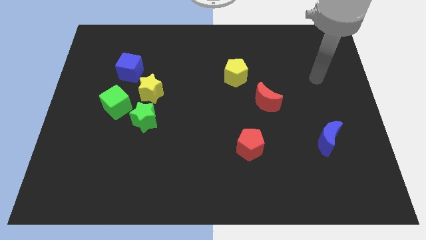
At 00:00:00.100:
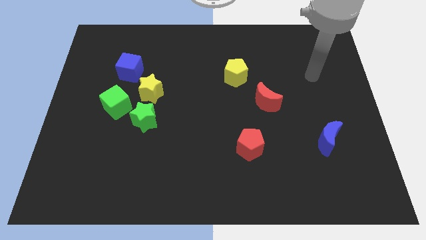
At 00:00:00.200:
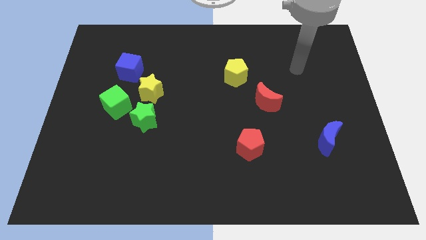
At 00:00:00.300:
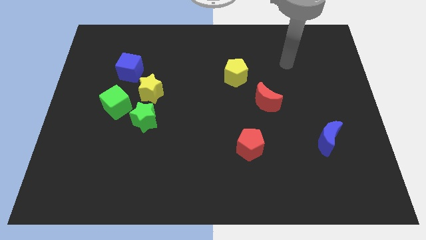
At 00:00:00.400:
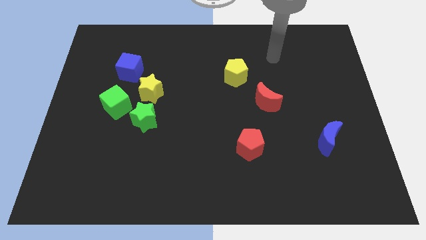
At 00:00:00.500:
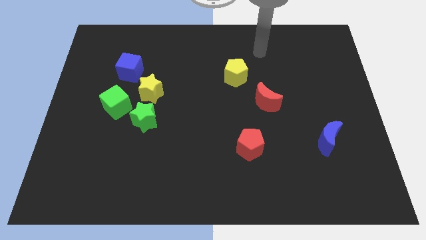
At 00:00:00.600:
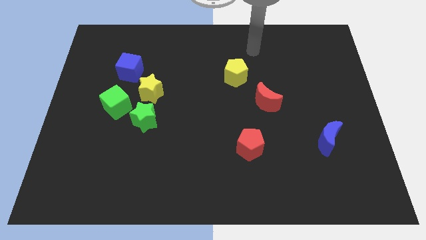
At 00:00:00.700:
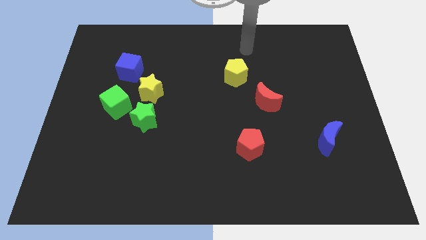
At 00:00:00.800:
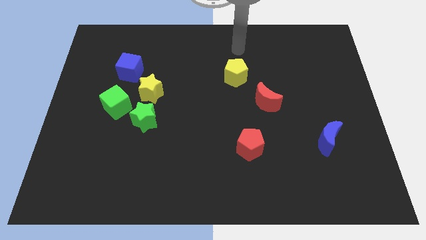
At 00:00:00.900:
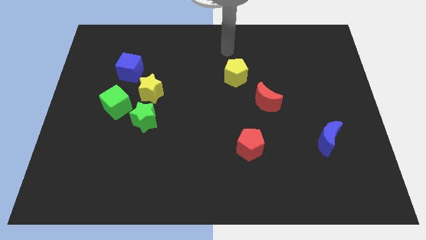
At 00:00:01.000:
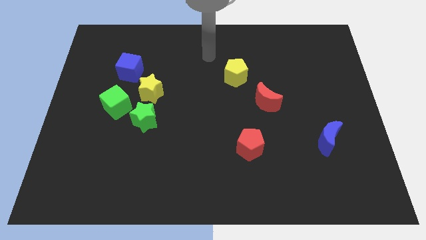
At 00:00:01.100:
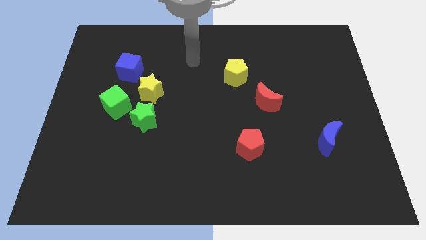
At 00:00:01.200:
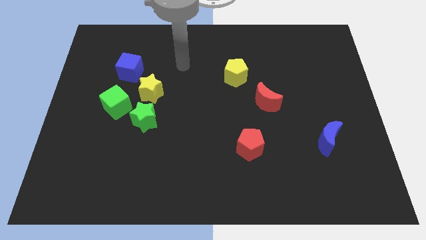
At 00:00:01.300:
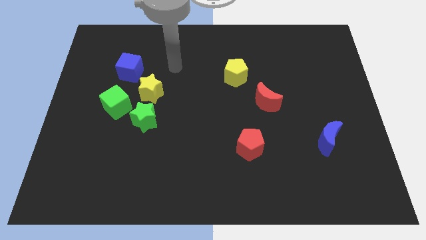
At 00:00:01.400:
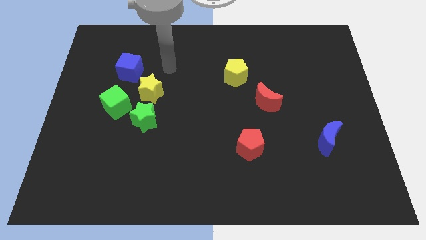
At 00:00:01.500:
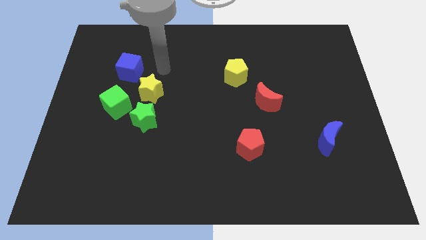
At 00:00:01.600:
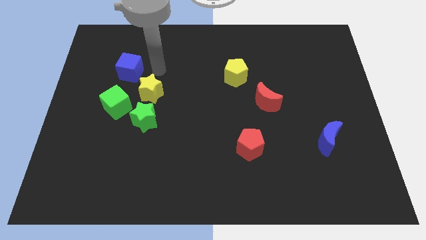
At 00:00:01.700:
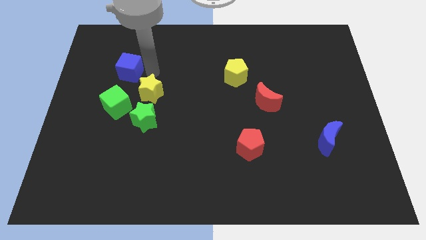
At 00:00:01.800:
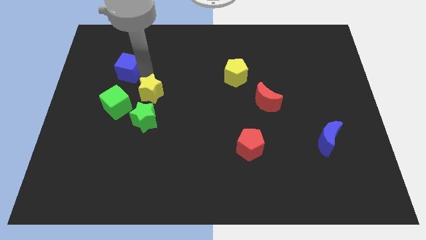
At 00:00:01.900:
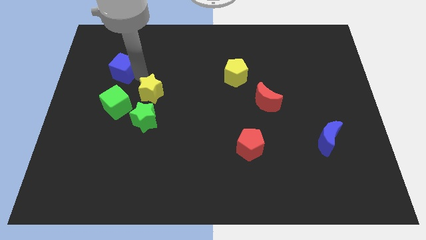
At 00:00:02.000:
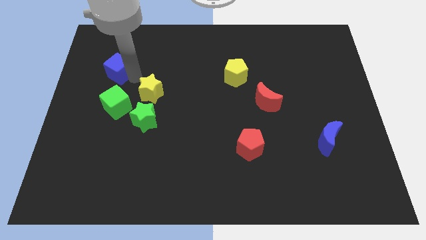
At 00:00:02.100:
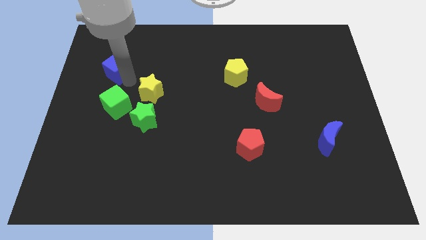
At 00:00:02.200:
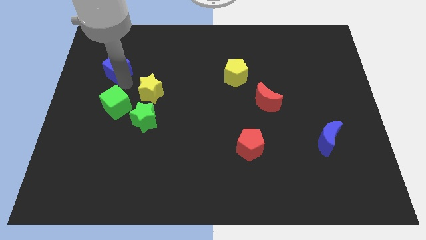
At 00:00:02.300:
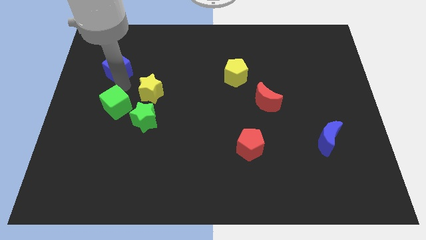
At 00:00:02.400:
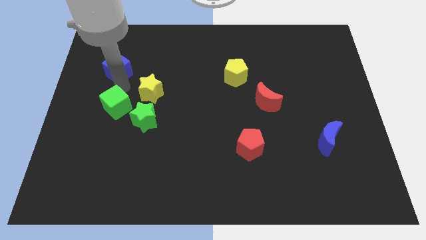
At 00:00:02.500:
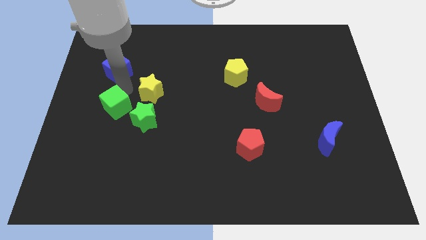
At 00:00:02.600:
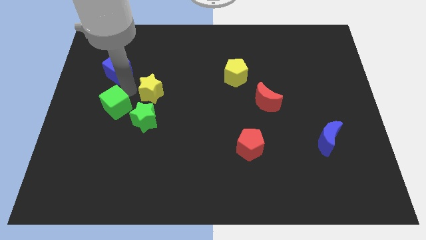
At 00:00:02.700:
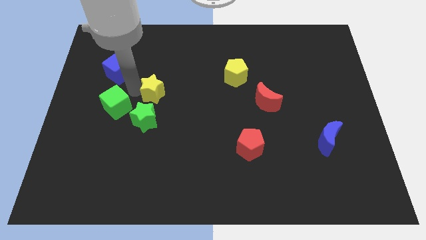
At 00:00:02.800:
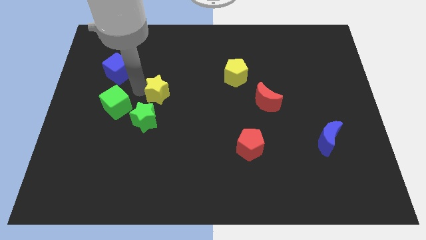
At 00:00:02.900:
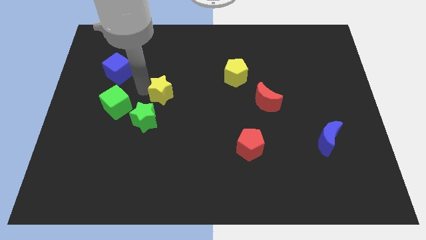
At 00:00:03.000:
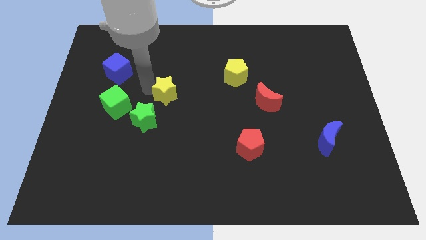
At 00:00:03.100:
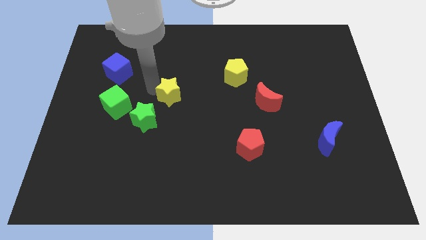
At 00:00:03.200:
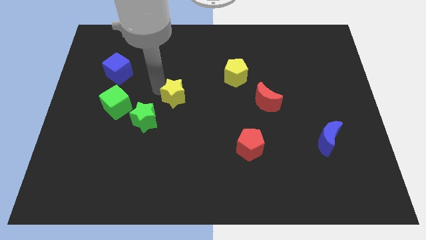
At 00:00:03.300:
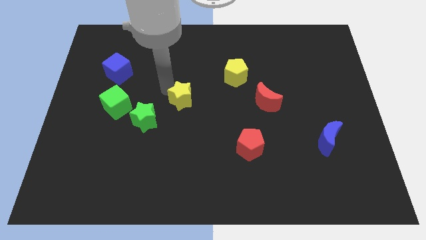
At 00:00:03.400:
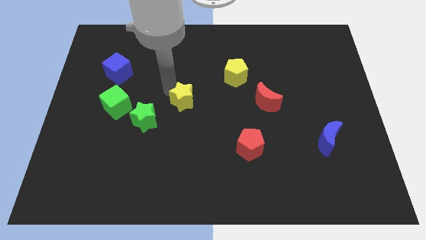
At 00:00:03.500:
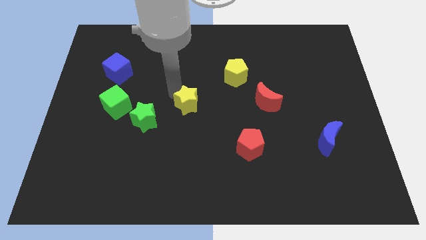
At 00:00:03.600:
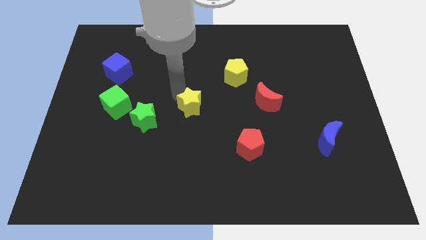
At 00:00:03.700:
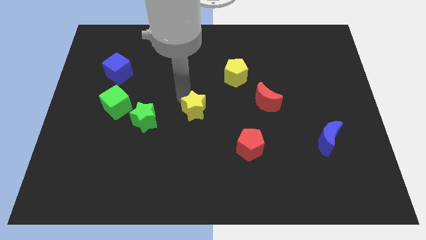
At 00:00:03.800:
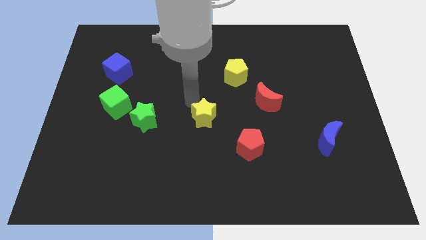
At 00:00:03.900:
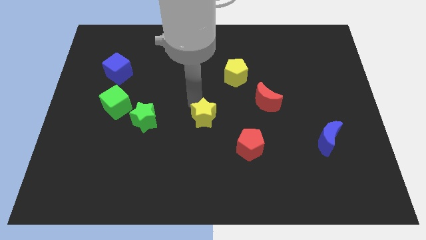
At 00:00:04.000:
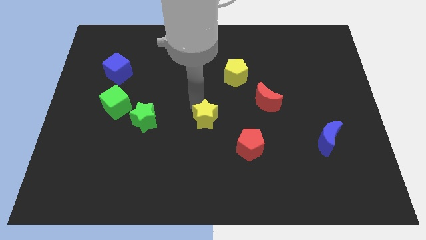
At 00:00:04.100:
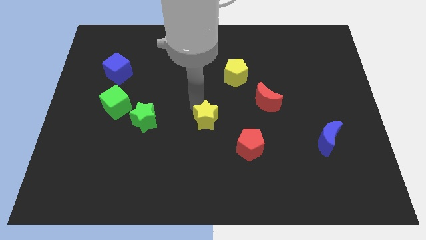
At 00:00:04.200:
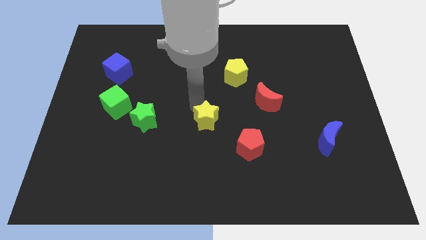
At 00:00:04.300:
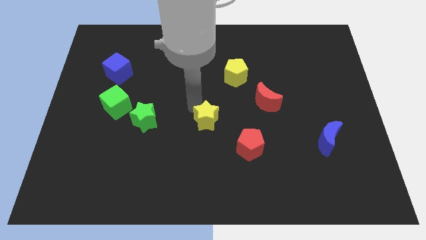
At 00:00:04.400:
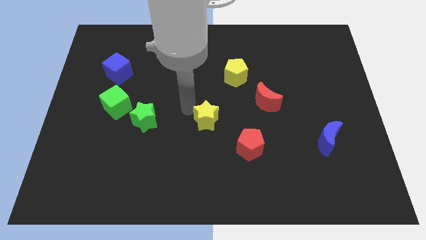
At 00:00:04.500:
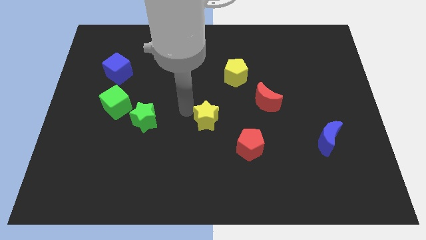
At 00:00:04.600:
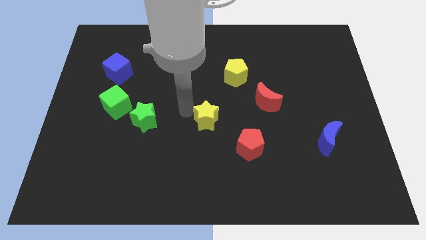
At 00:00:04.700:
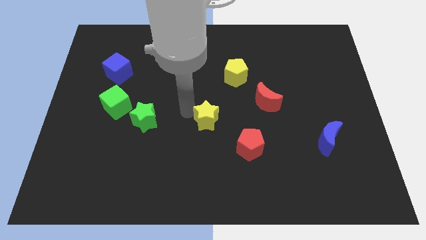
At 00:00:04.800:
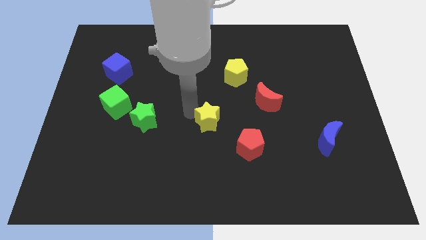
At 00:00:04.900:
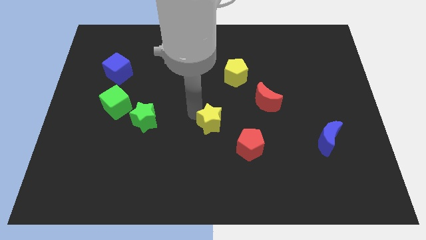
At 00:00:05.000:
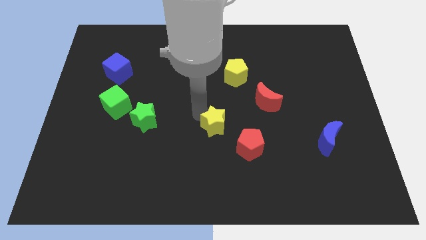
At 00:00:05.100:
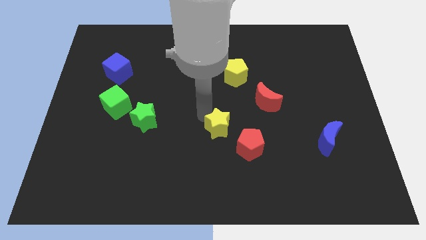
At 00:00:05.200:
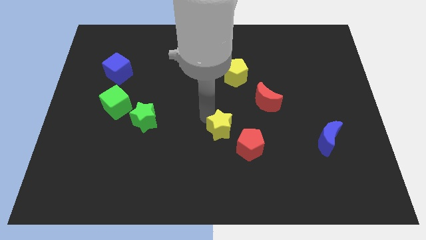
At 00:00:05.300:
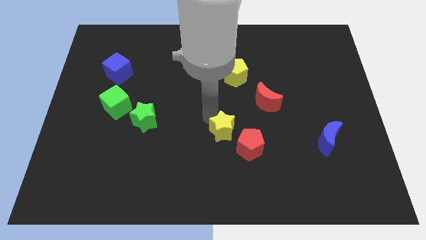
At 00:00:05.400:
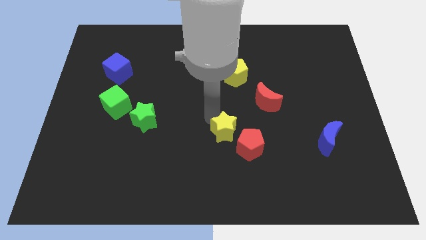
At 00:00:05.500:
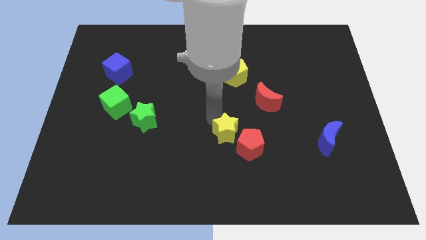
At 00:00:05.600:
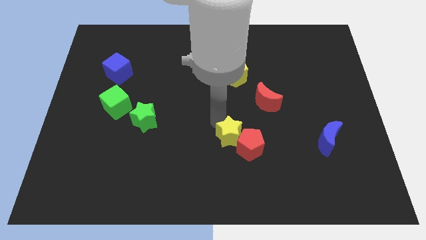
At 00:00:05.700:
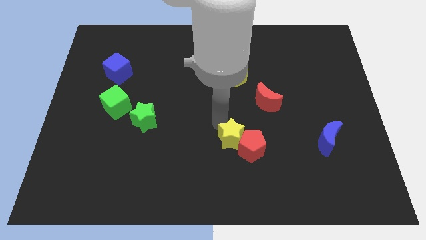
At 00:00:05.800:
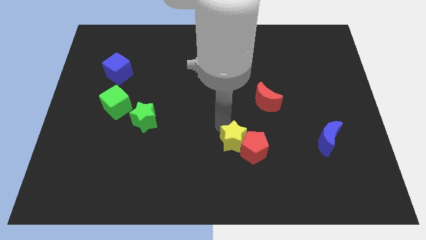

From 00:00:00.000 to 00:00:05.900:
slide the yellow star next to the red pentagon

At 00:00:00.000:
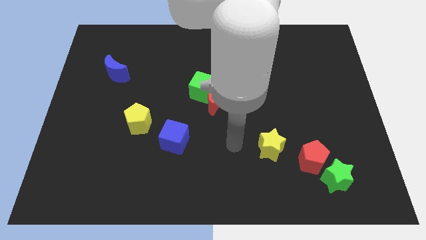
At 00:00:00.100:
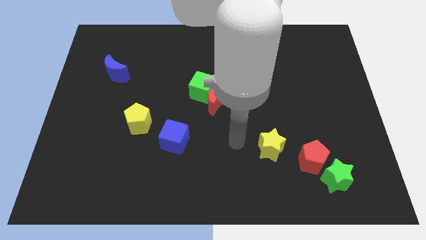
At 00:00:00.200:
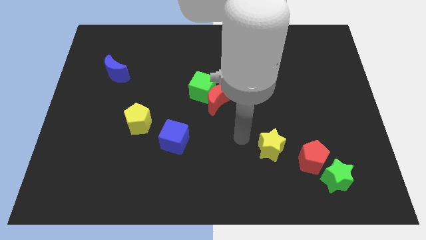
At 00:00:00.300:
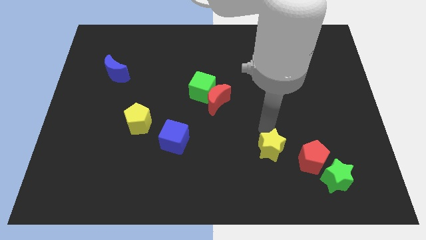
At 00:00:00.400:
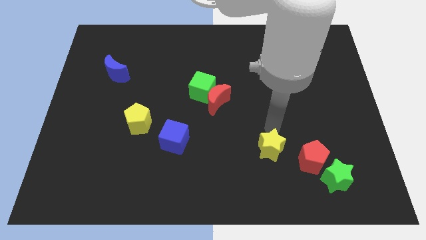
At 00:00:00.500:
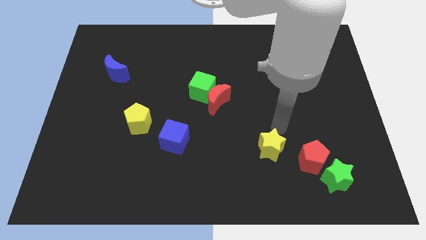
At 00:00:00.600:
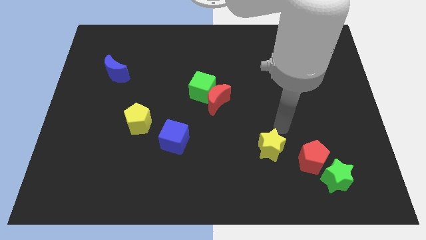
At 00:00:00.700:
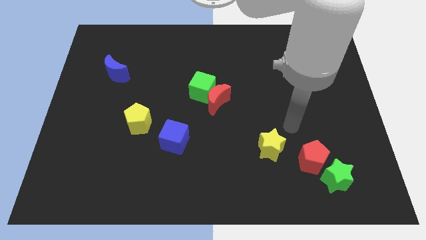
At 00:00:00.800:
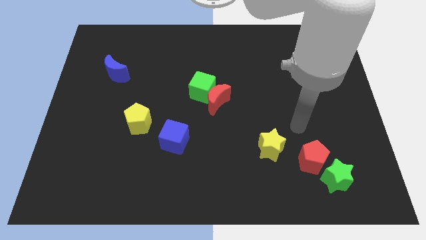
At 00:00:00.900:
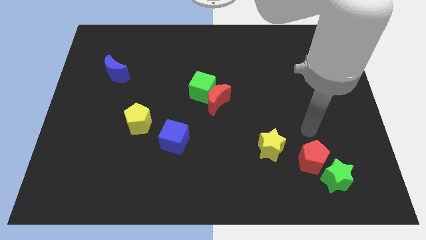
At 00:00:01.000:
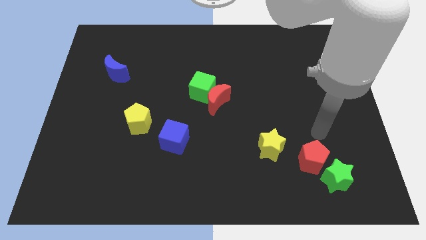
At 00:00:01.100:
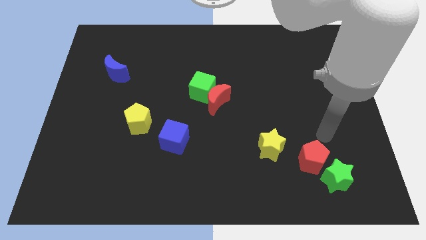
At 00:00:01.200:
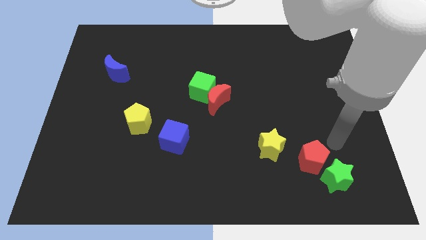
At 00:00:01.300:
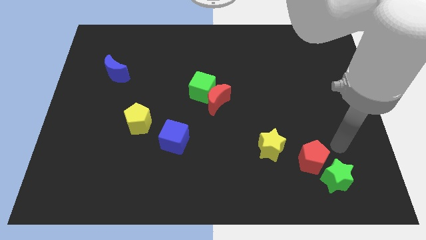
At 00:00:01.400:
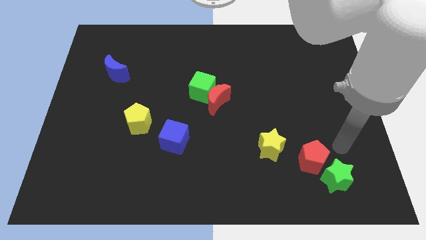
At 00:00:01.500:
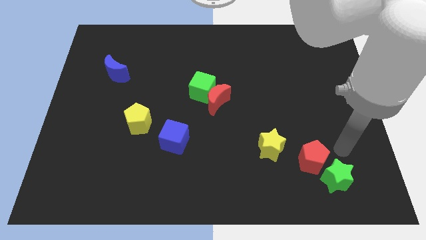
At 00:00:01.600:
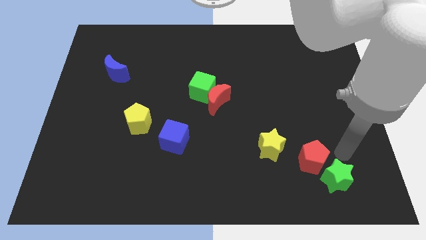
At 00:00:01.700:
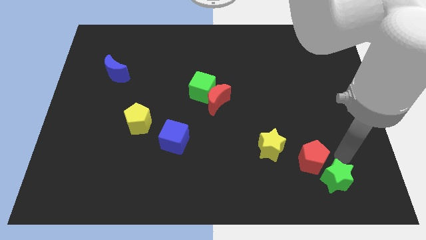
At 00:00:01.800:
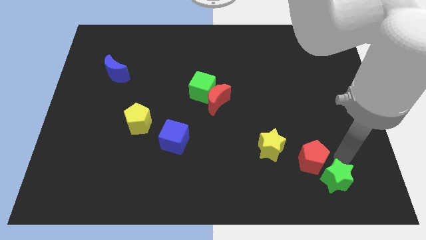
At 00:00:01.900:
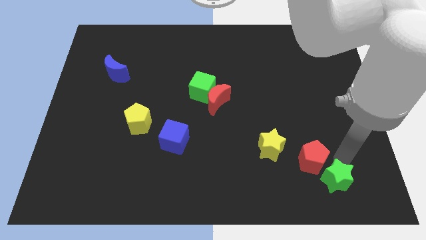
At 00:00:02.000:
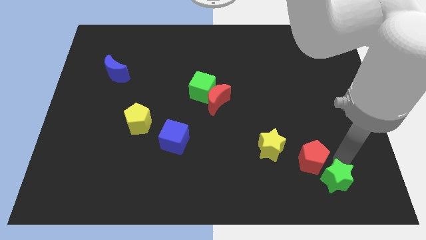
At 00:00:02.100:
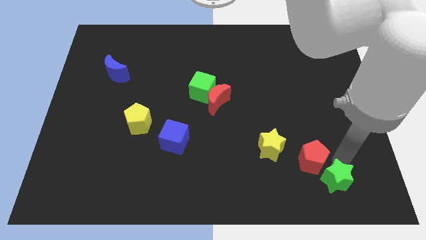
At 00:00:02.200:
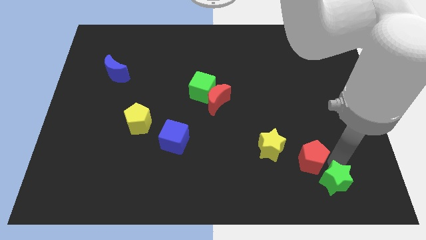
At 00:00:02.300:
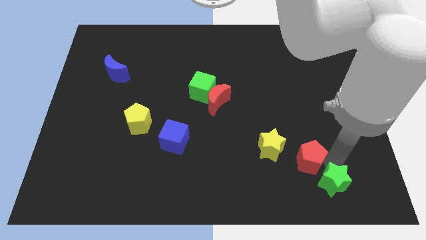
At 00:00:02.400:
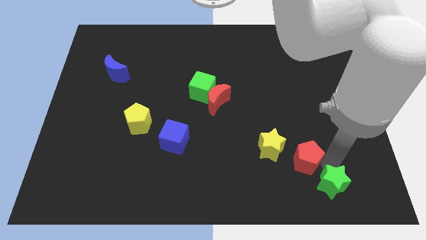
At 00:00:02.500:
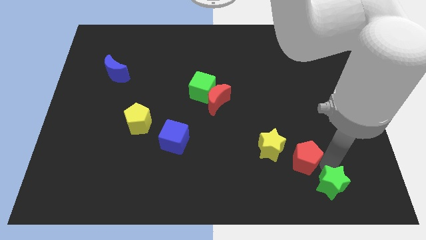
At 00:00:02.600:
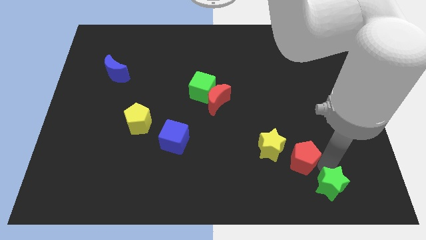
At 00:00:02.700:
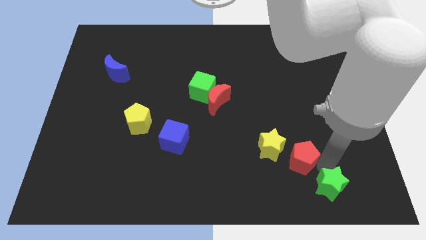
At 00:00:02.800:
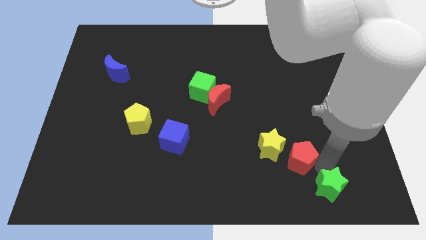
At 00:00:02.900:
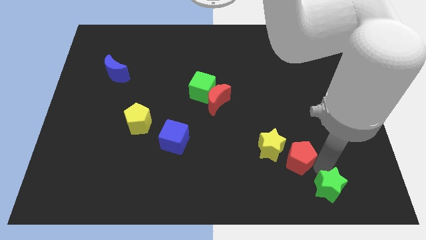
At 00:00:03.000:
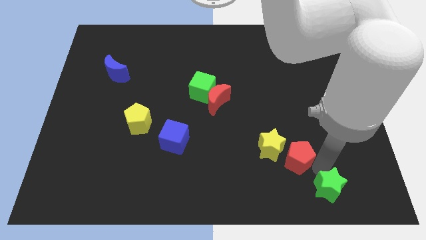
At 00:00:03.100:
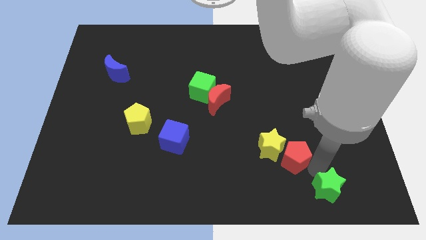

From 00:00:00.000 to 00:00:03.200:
slide the red pentagon towards the yellow star
